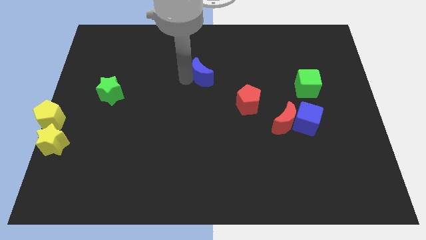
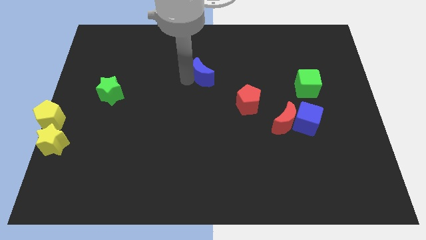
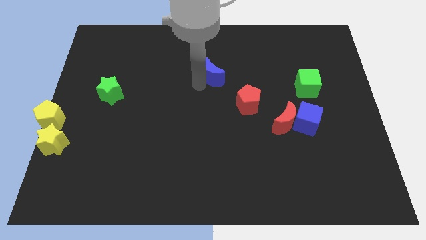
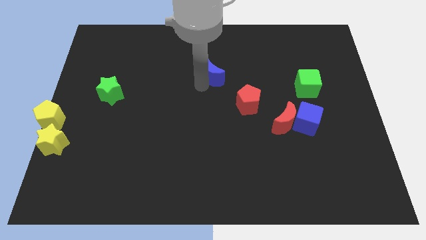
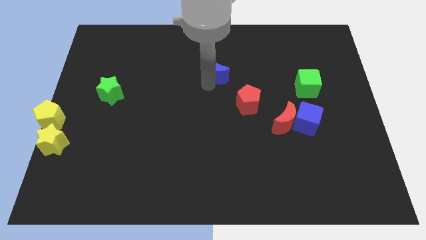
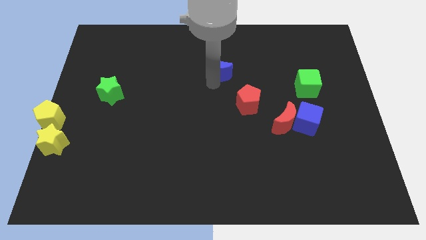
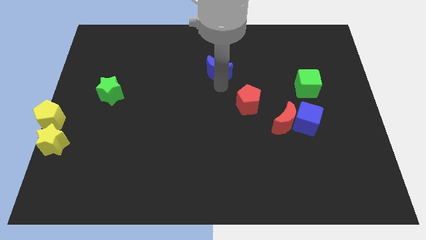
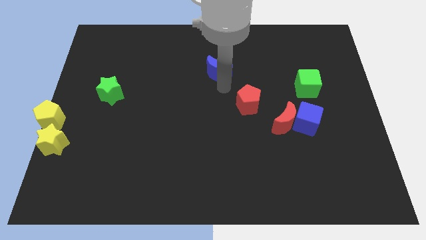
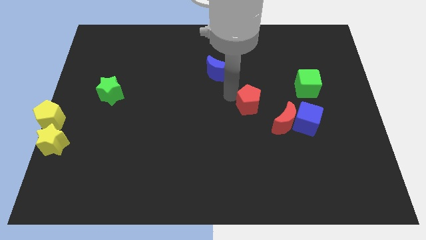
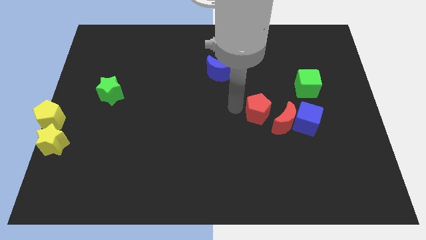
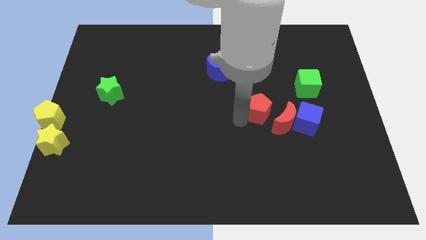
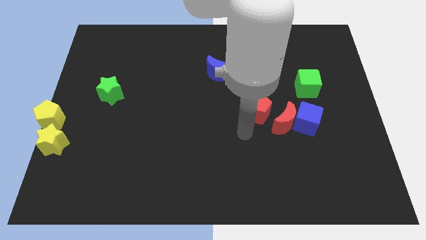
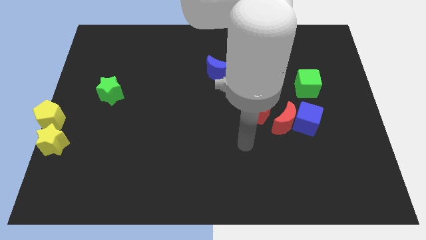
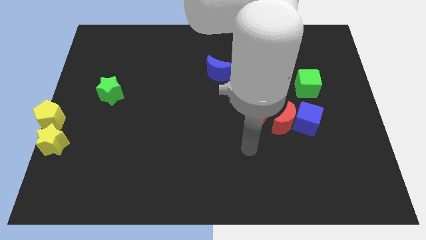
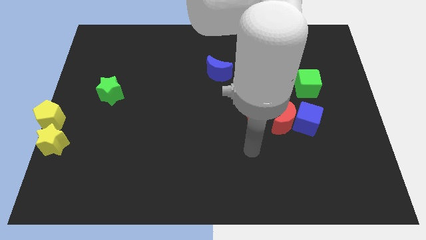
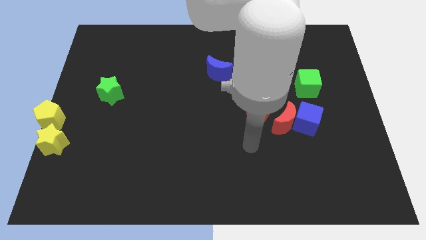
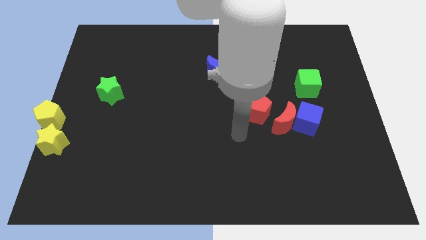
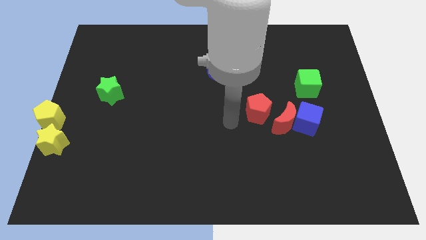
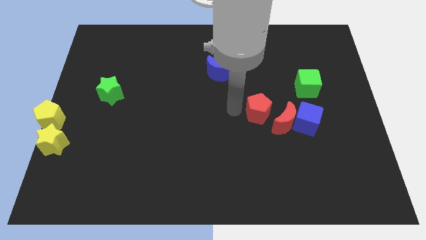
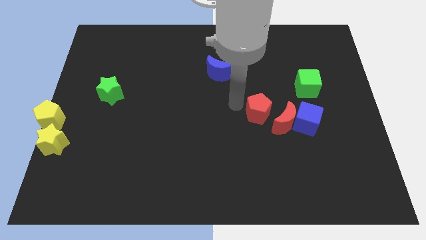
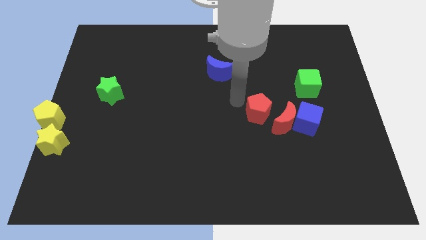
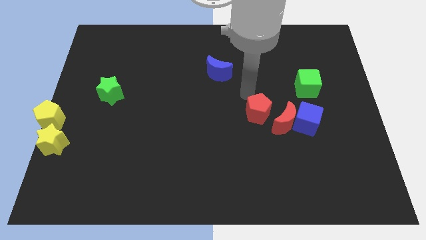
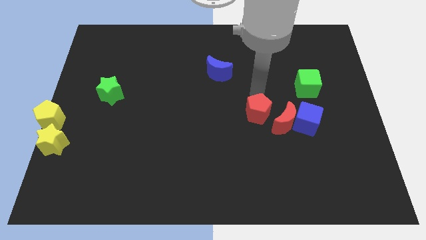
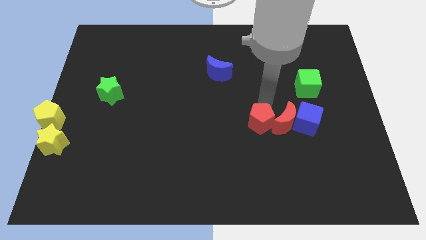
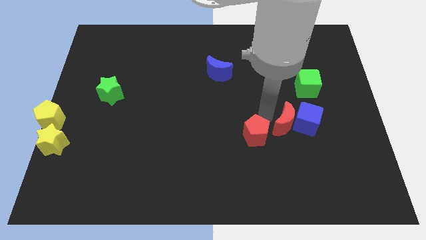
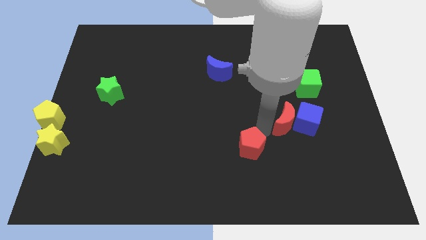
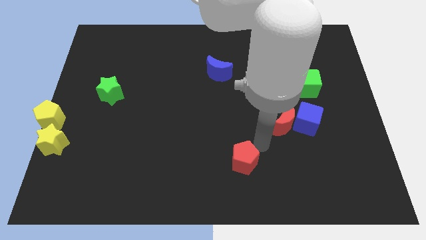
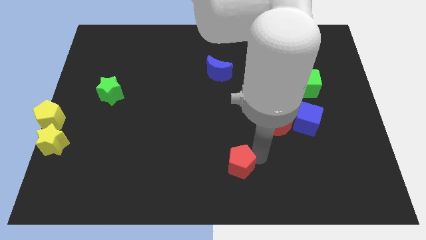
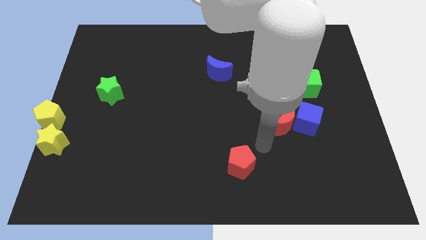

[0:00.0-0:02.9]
push the red pentagon to the bottom

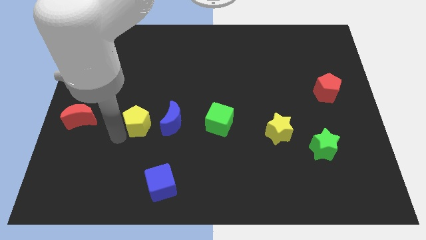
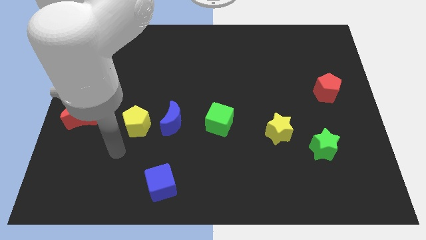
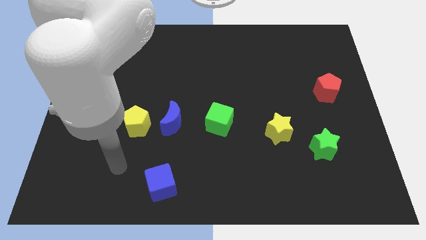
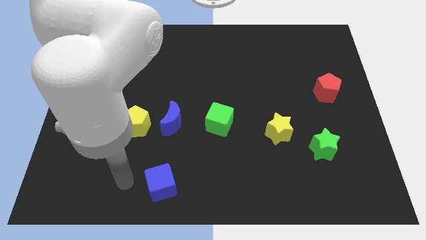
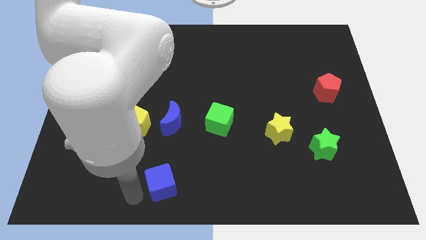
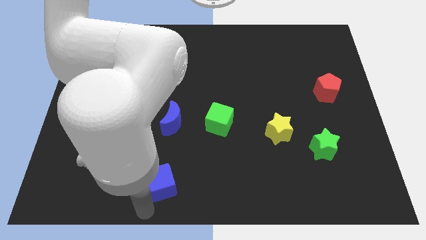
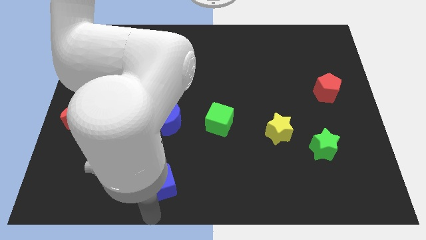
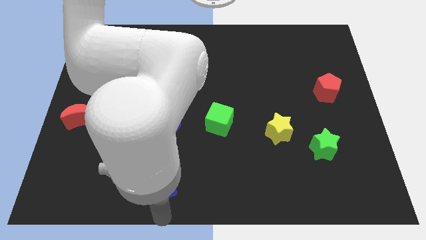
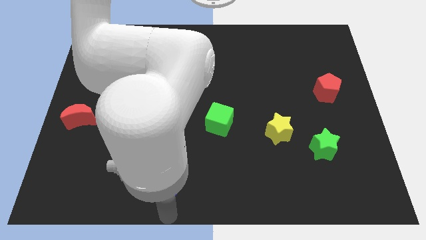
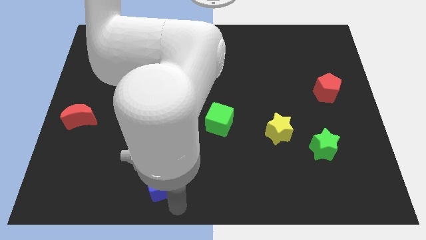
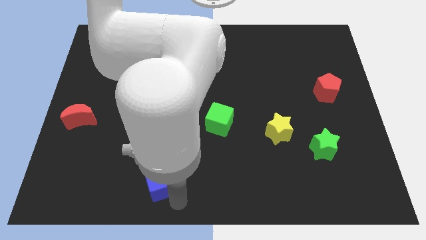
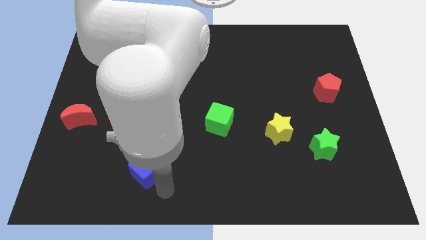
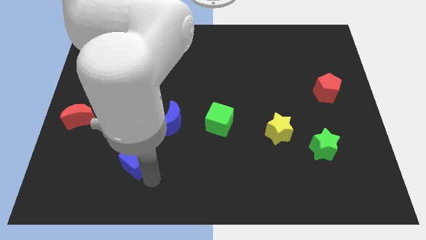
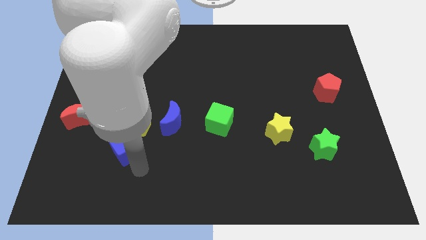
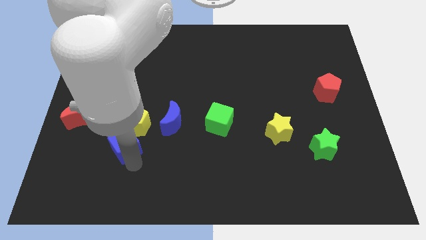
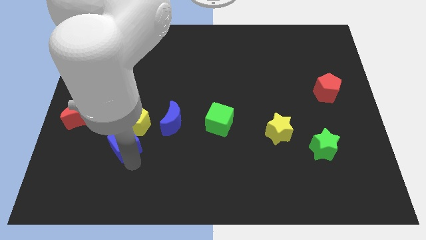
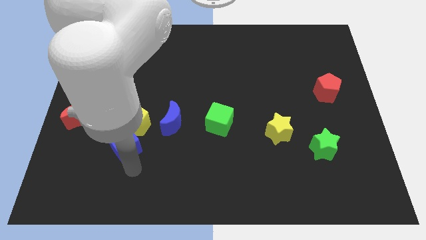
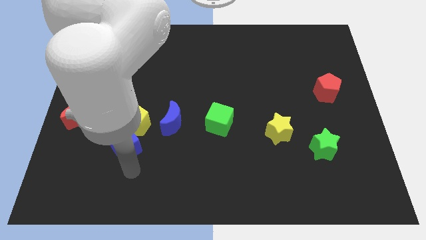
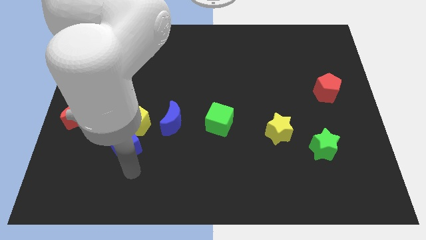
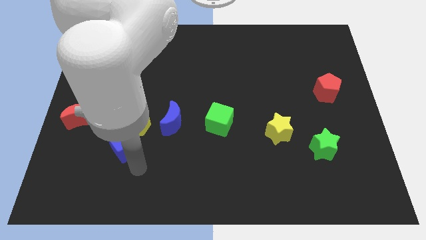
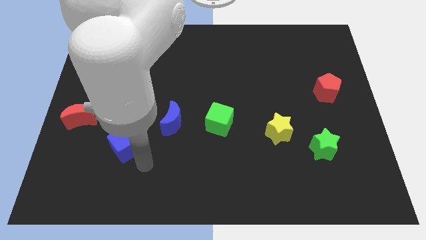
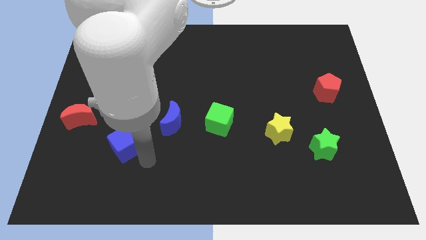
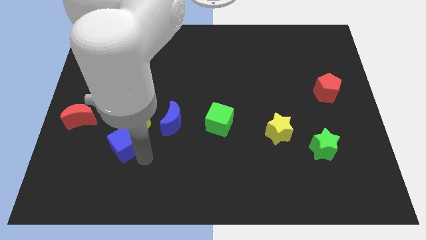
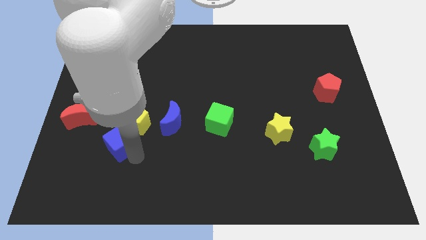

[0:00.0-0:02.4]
push the blue cube into the yellow pentagon

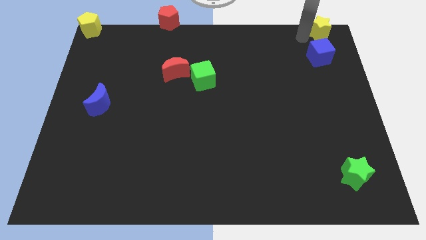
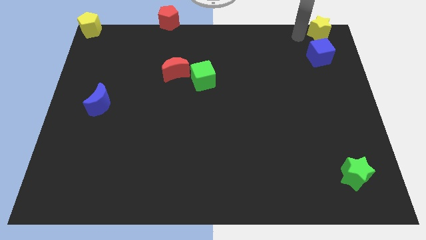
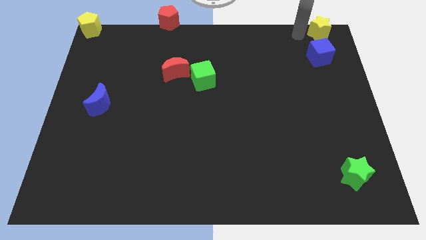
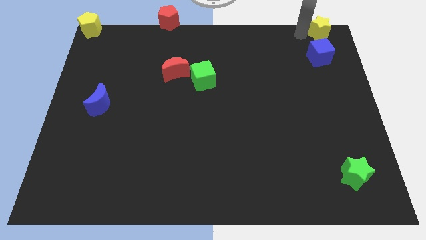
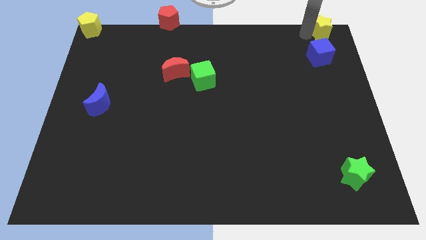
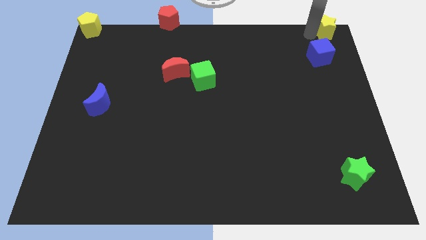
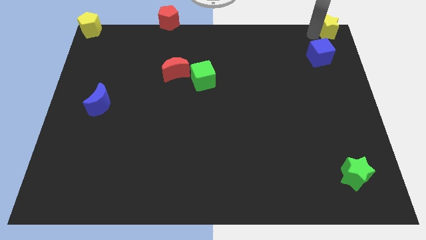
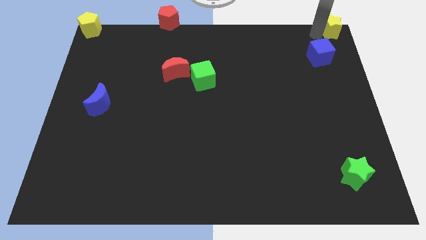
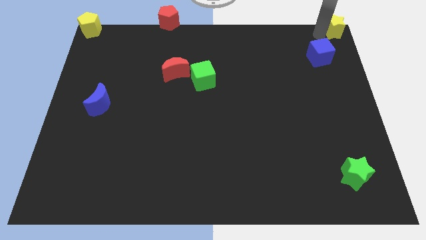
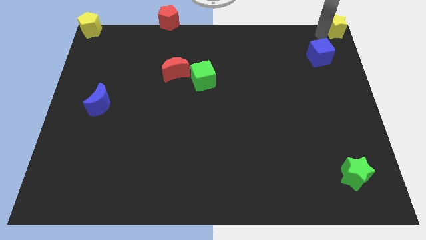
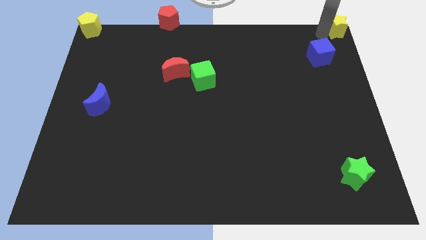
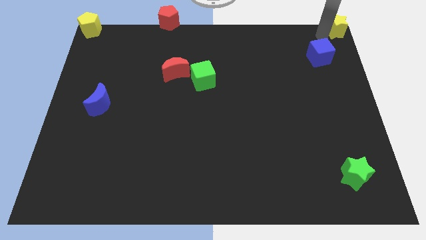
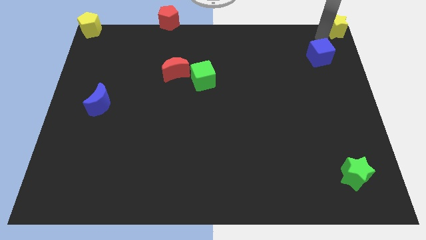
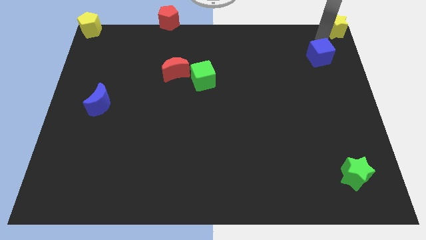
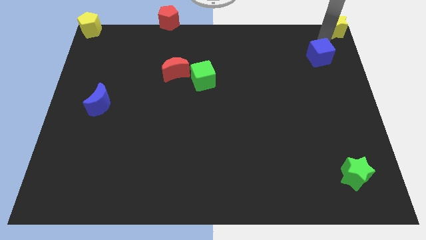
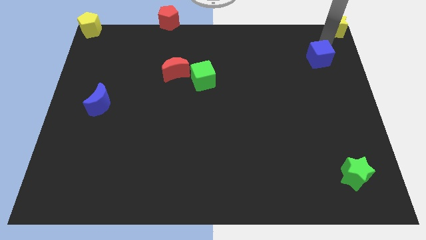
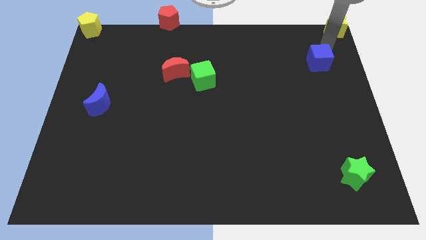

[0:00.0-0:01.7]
place yellow star to the top right of the board

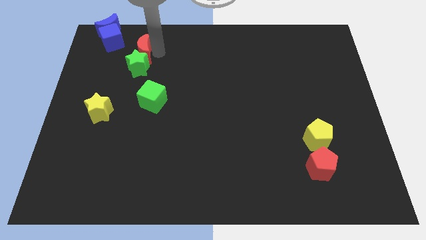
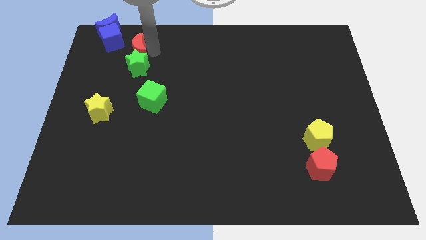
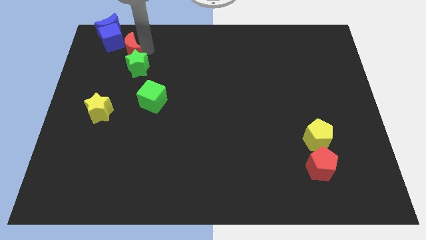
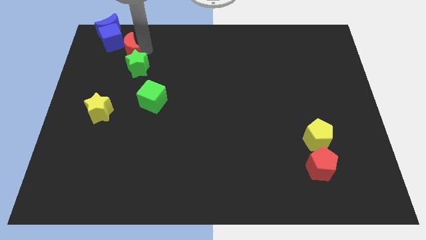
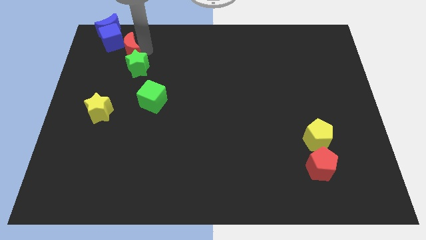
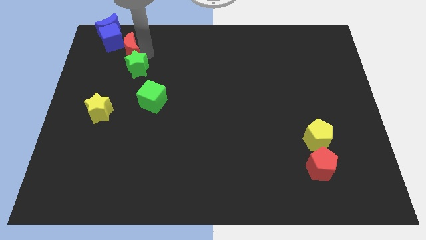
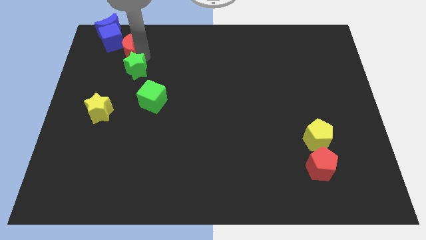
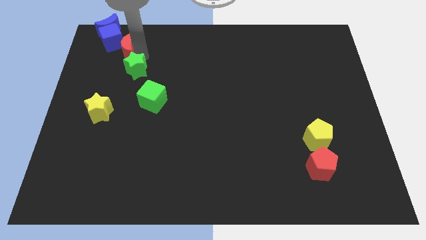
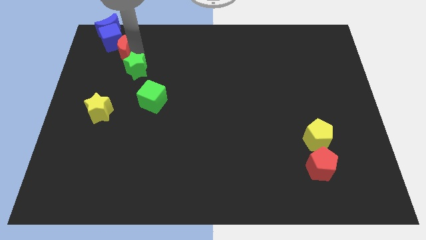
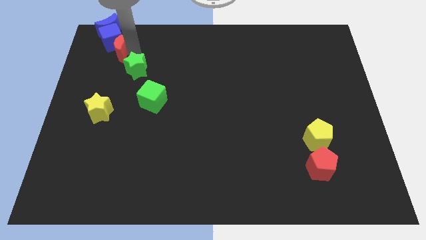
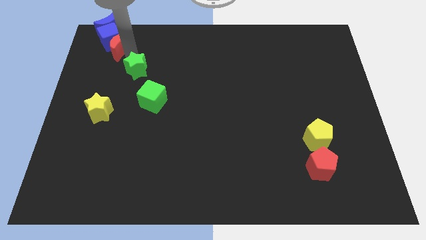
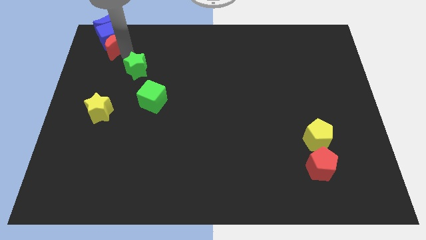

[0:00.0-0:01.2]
place the red moon in between the blue cube and green star

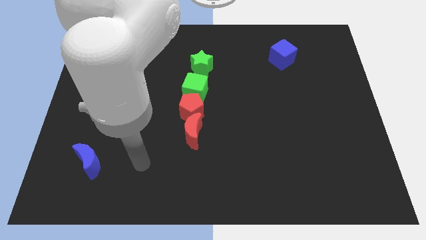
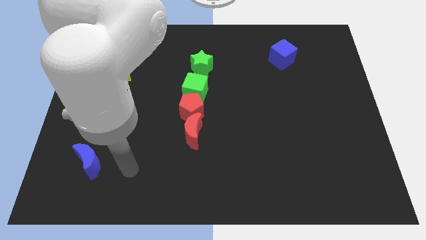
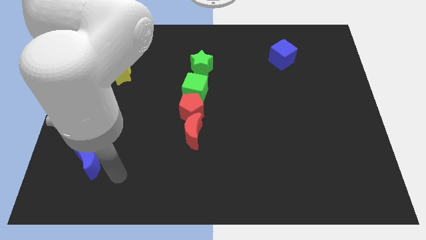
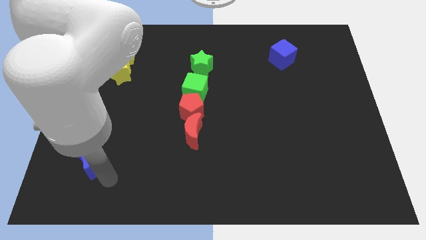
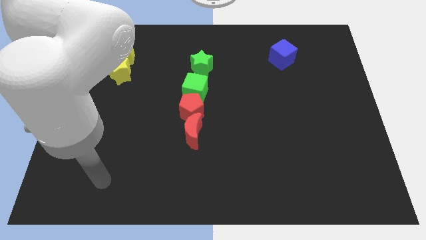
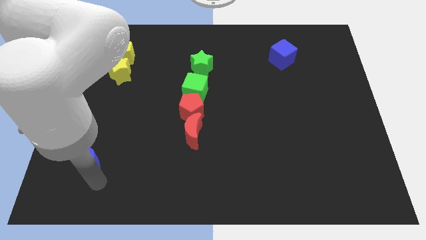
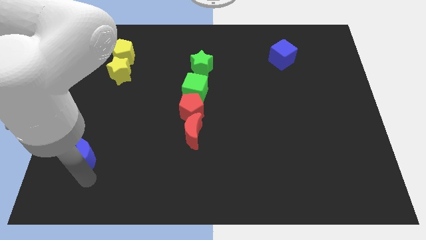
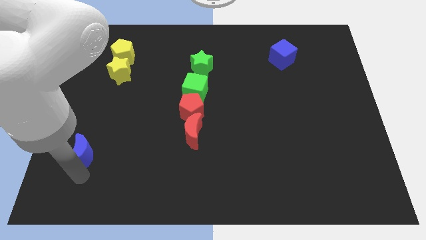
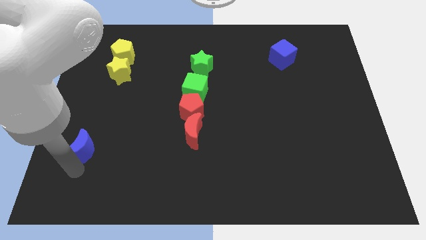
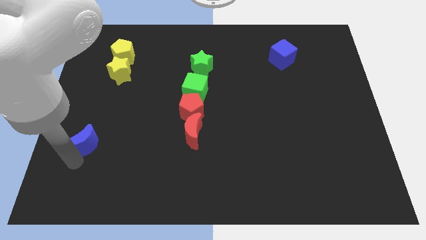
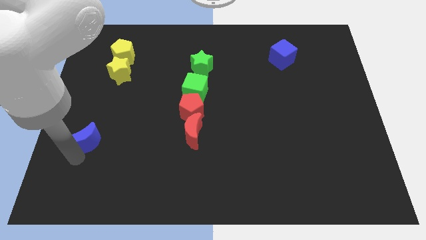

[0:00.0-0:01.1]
push the blue crescent to the top of the board
